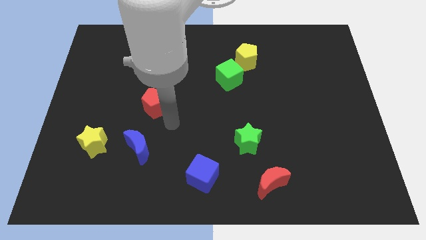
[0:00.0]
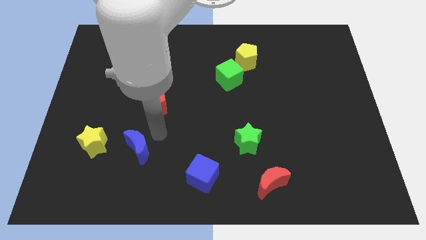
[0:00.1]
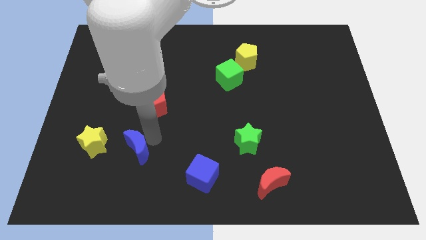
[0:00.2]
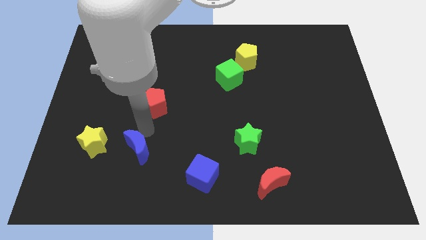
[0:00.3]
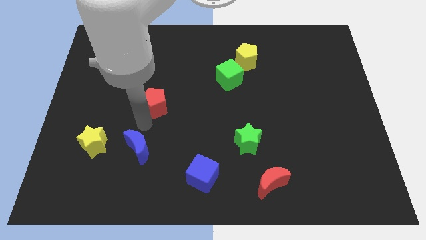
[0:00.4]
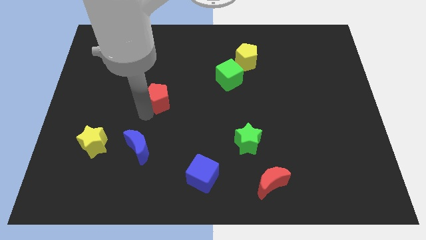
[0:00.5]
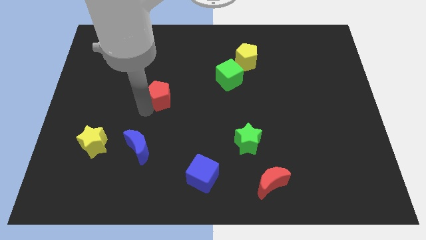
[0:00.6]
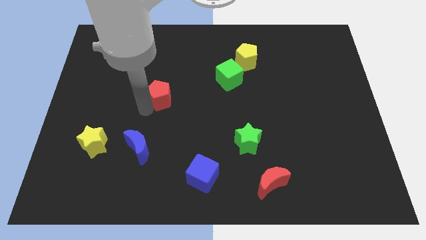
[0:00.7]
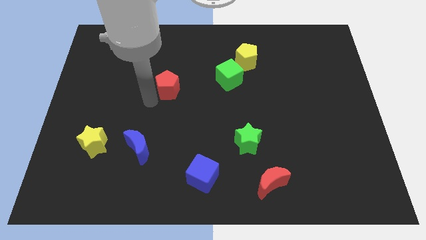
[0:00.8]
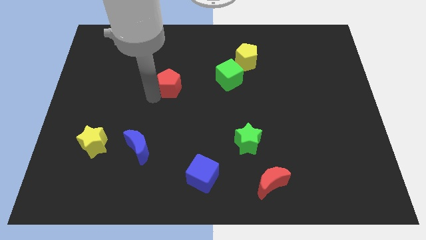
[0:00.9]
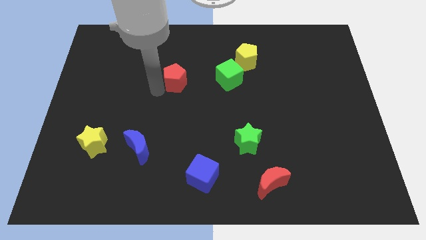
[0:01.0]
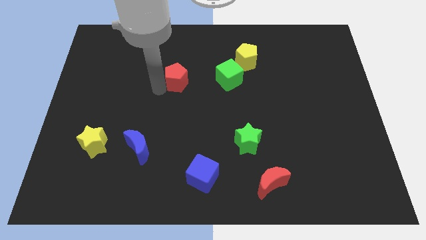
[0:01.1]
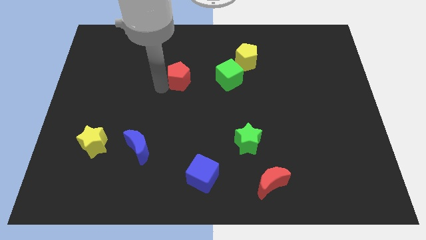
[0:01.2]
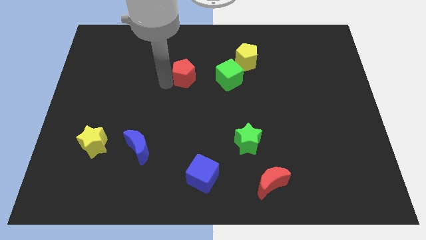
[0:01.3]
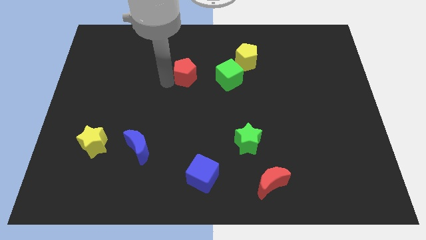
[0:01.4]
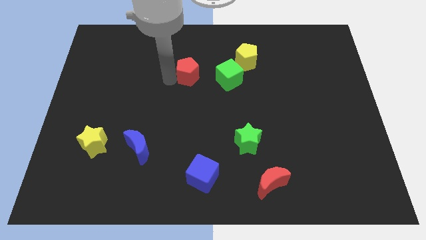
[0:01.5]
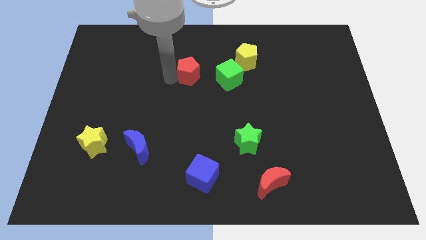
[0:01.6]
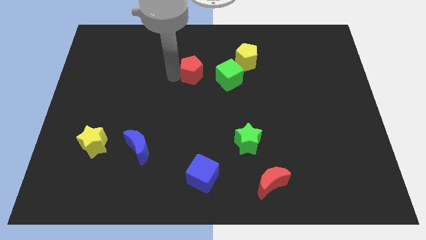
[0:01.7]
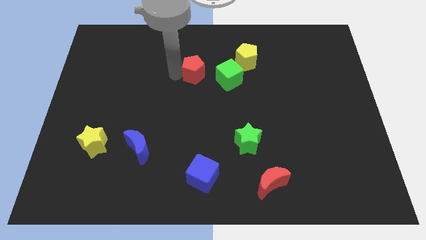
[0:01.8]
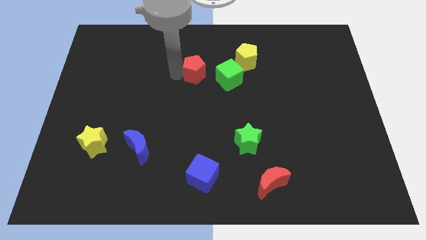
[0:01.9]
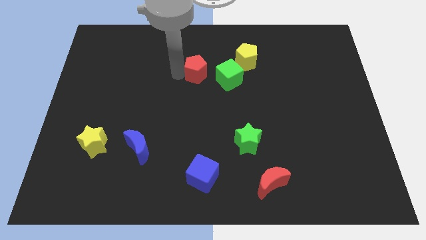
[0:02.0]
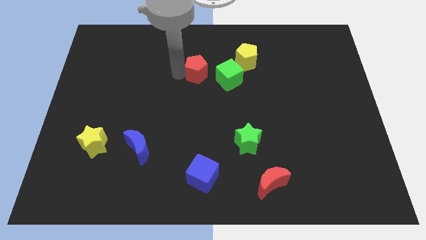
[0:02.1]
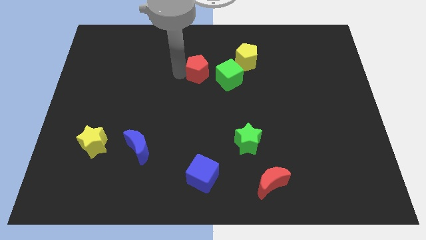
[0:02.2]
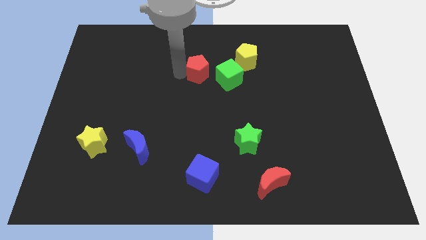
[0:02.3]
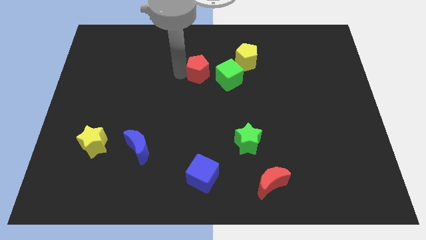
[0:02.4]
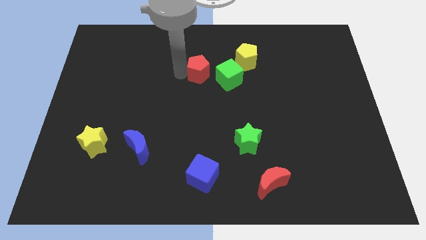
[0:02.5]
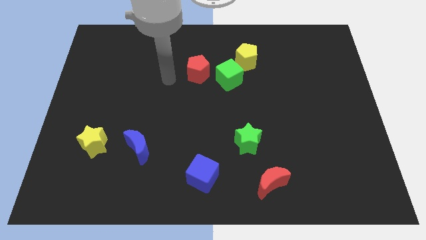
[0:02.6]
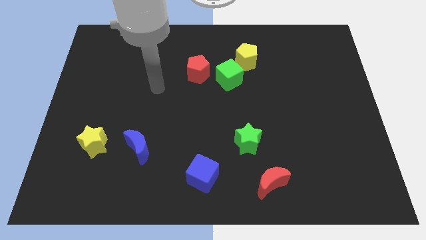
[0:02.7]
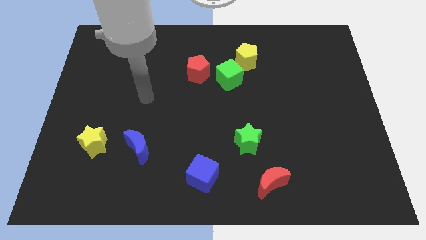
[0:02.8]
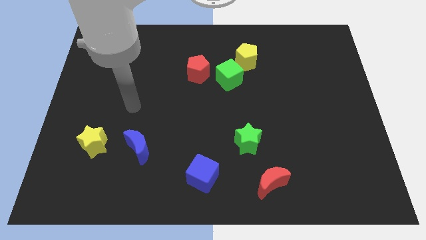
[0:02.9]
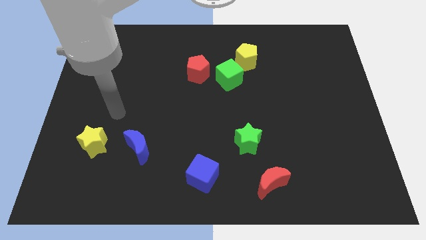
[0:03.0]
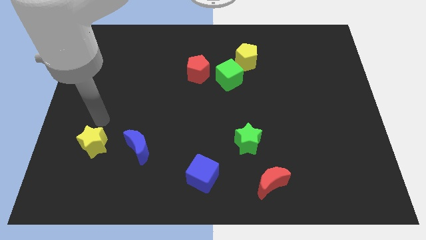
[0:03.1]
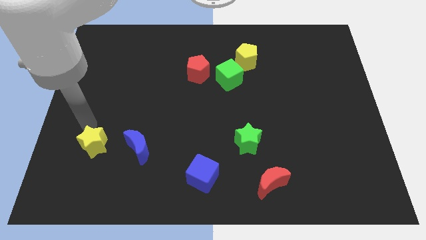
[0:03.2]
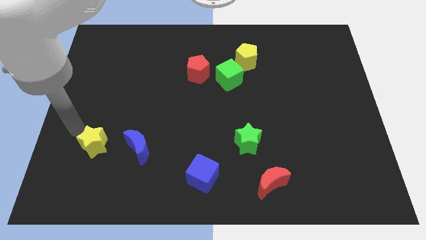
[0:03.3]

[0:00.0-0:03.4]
push the red pentagon to the left of the green cube

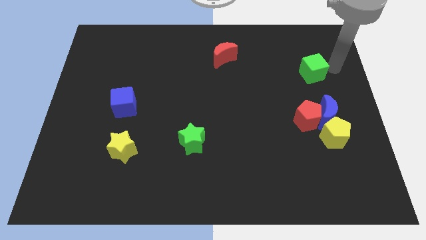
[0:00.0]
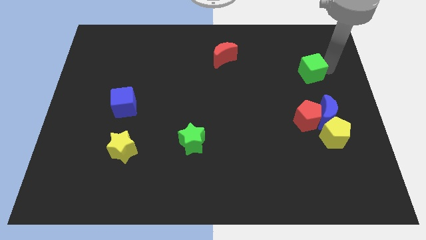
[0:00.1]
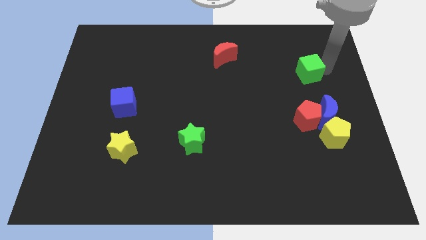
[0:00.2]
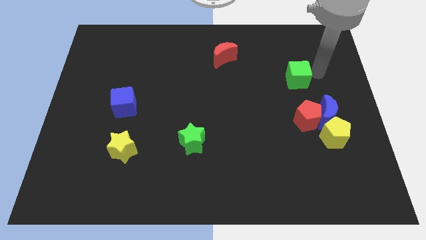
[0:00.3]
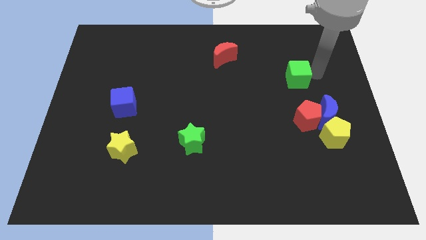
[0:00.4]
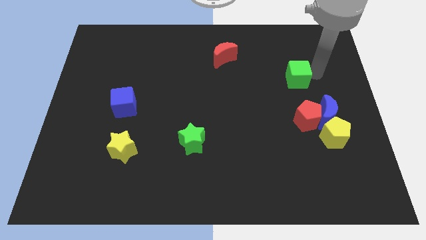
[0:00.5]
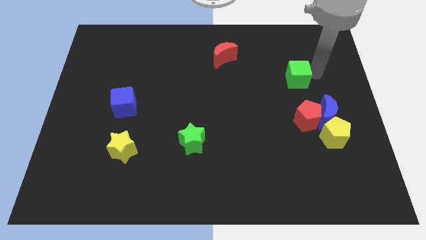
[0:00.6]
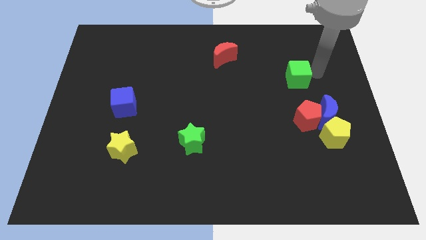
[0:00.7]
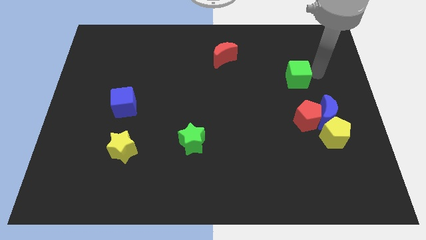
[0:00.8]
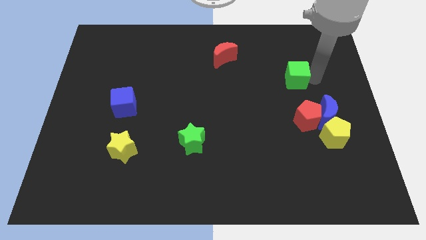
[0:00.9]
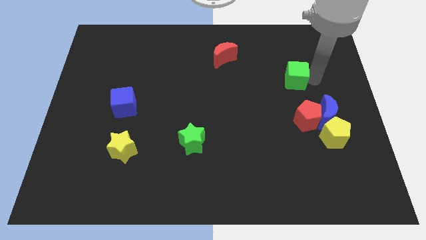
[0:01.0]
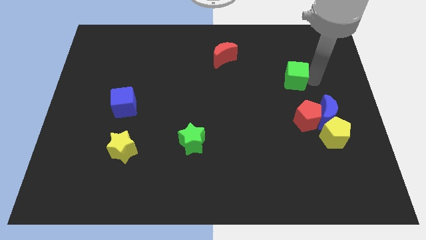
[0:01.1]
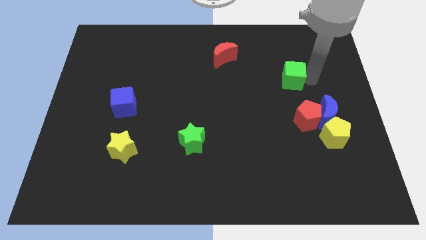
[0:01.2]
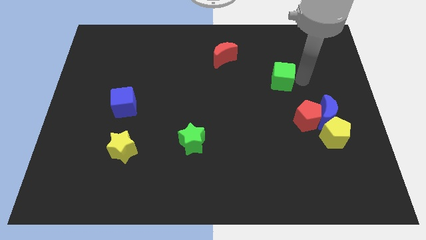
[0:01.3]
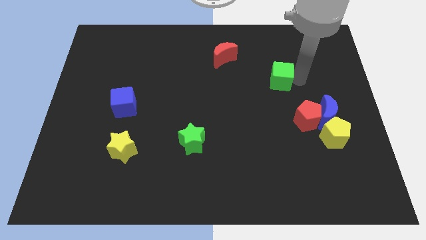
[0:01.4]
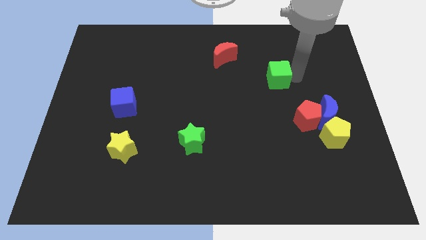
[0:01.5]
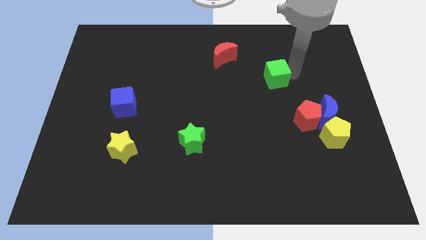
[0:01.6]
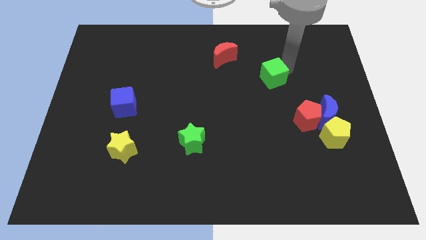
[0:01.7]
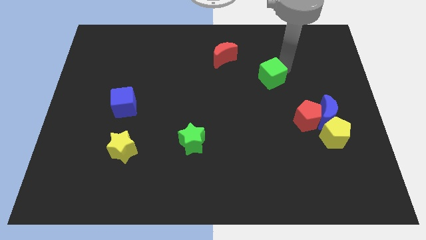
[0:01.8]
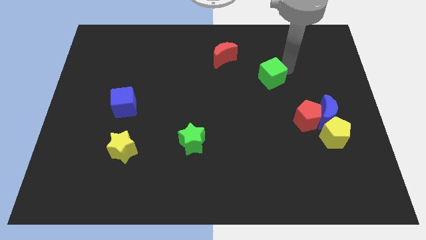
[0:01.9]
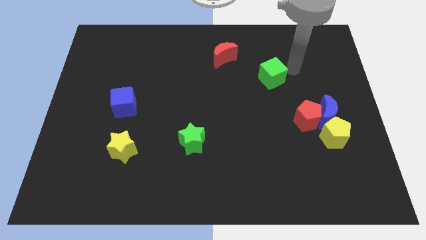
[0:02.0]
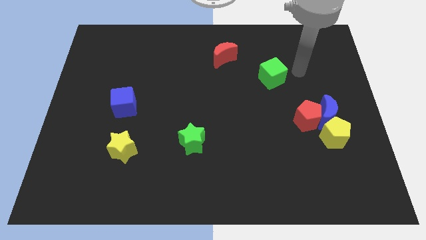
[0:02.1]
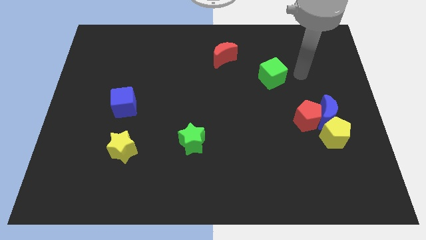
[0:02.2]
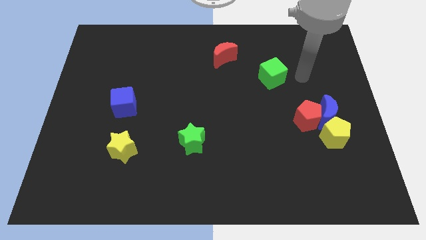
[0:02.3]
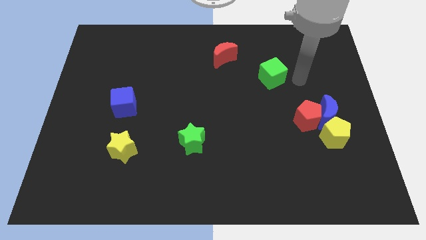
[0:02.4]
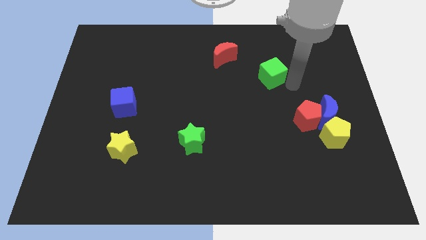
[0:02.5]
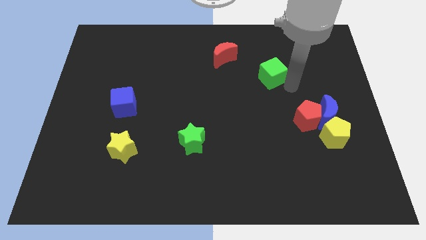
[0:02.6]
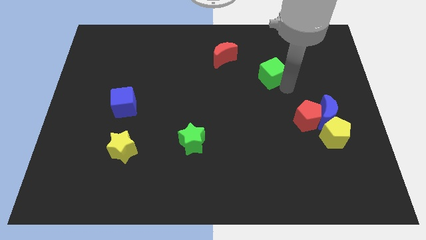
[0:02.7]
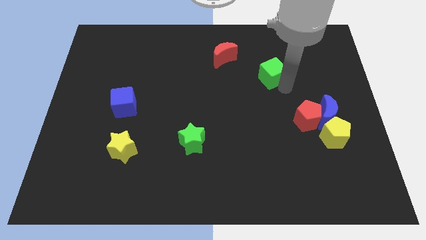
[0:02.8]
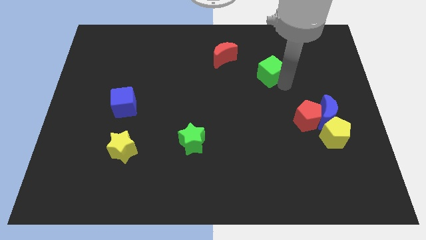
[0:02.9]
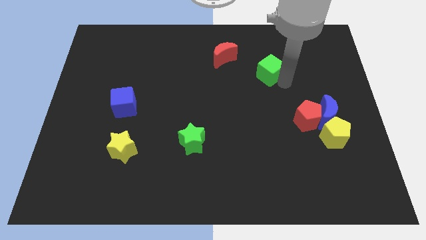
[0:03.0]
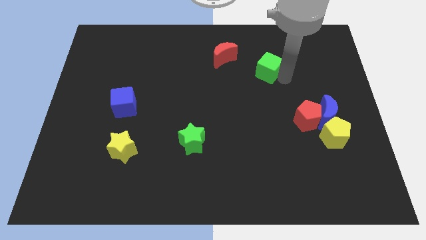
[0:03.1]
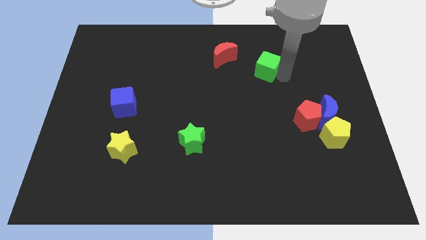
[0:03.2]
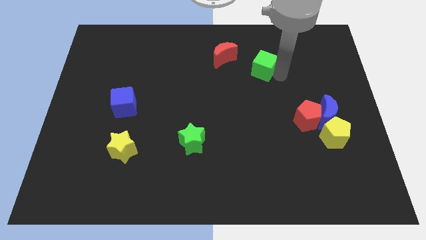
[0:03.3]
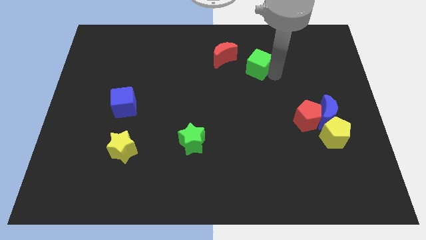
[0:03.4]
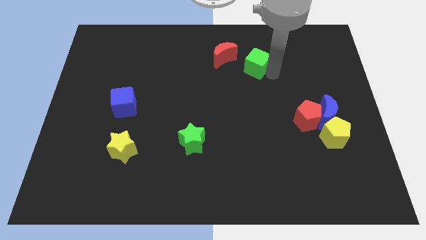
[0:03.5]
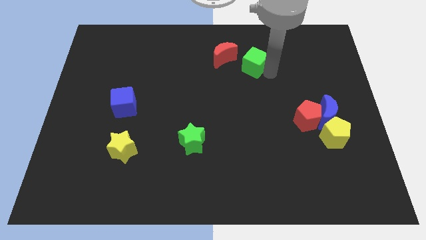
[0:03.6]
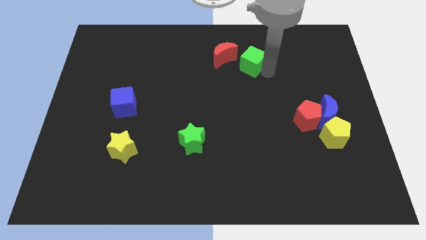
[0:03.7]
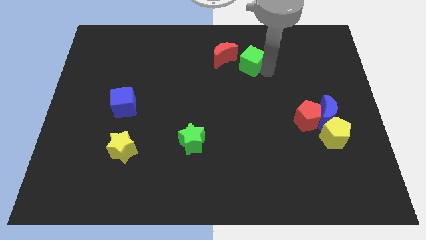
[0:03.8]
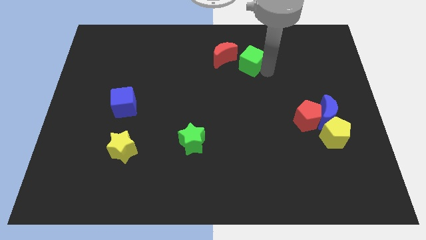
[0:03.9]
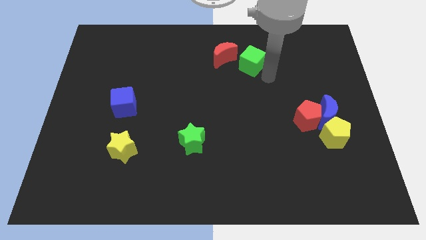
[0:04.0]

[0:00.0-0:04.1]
push the green cube towards the red moon

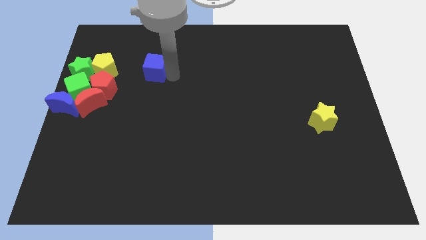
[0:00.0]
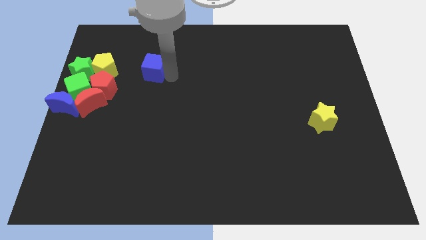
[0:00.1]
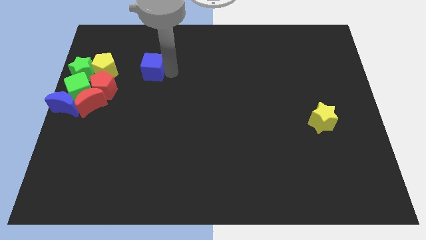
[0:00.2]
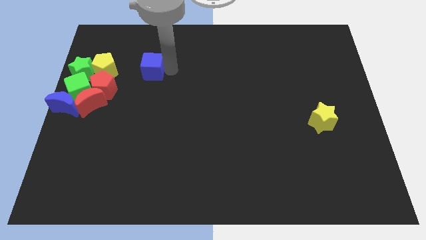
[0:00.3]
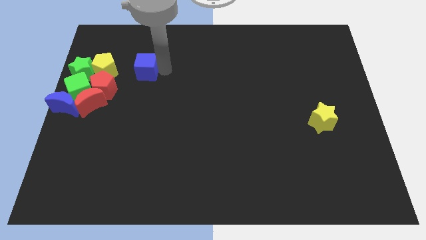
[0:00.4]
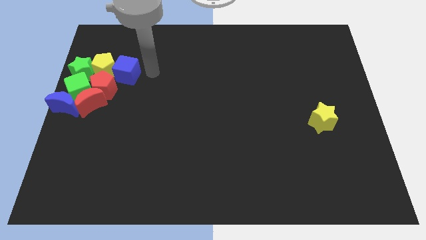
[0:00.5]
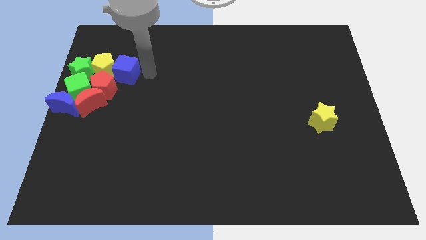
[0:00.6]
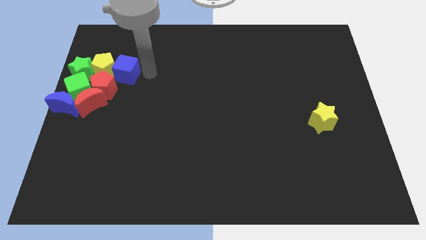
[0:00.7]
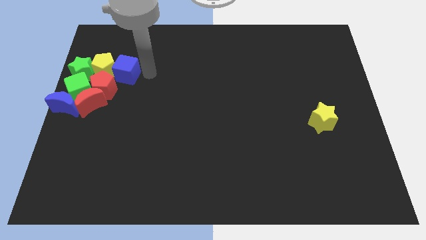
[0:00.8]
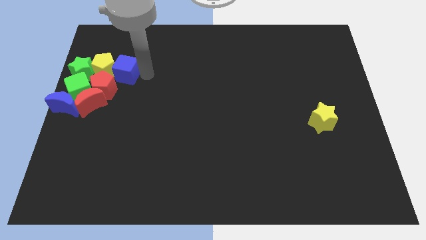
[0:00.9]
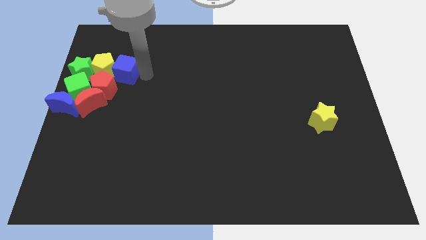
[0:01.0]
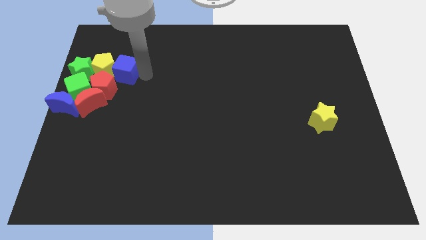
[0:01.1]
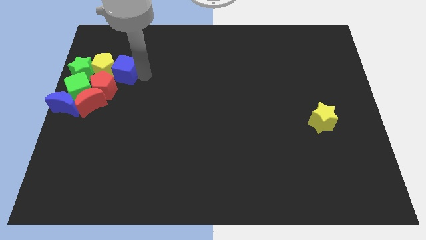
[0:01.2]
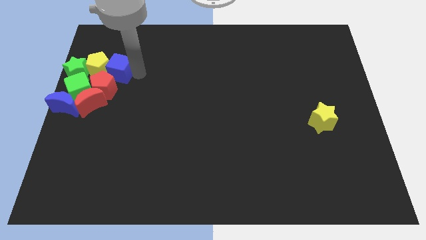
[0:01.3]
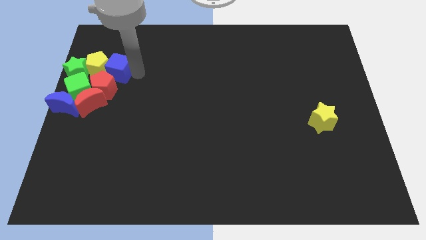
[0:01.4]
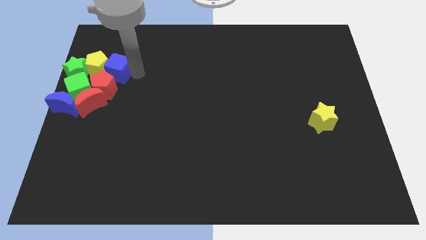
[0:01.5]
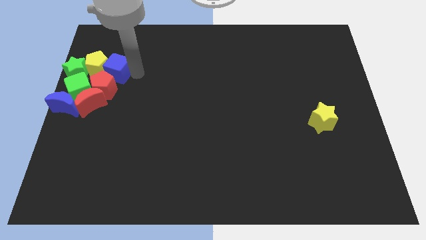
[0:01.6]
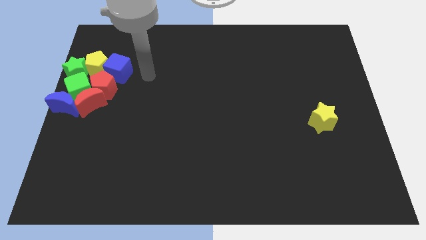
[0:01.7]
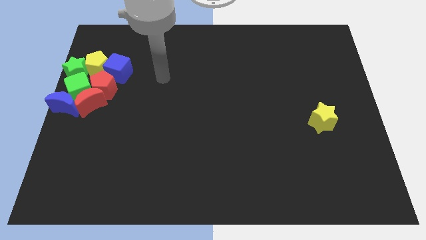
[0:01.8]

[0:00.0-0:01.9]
push the blue cube into group of blocks
